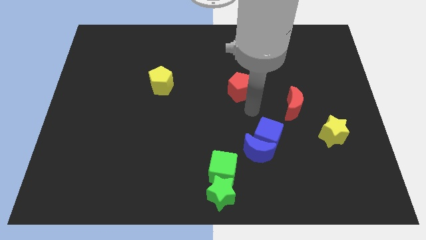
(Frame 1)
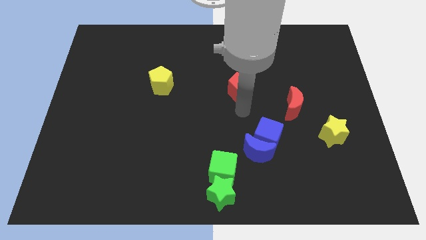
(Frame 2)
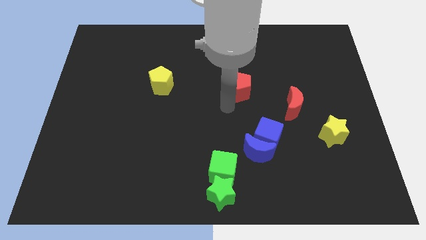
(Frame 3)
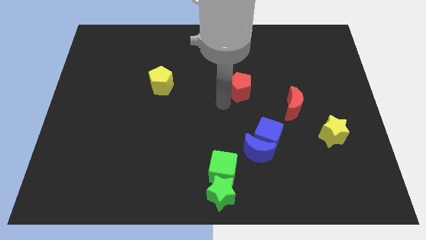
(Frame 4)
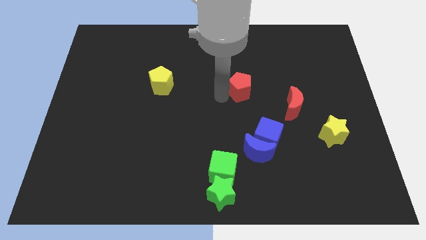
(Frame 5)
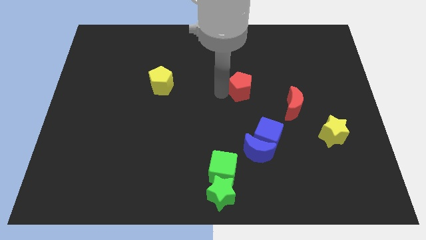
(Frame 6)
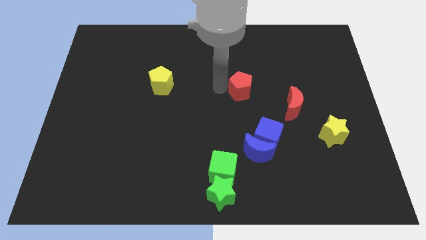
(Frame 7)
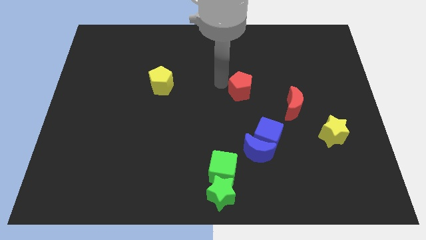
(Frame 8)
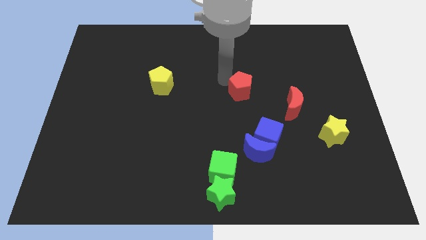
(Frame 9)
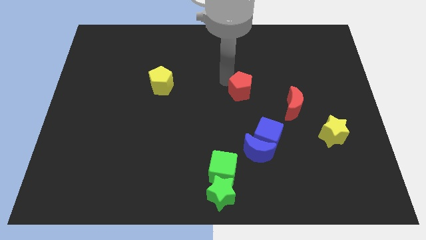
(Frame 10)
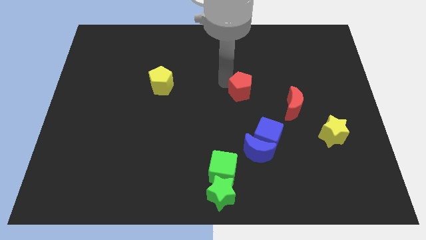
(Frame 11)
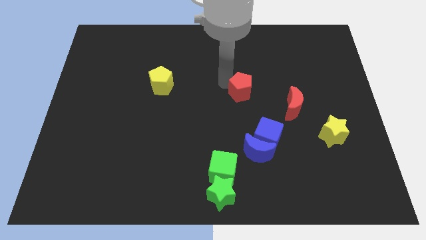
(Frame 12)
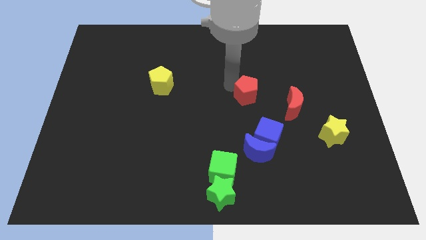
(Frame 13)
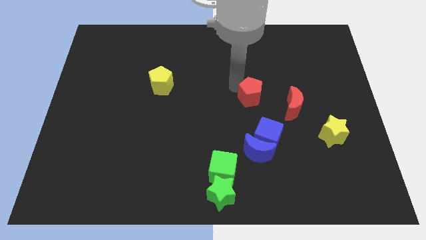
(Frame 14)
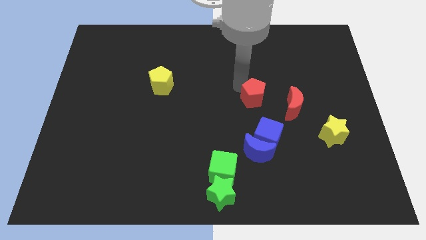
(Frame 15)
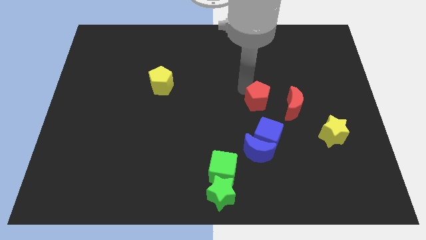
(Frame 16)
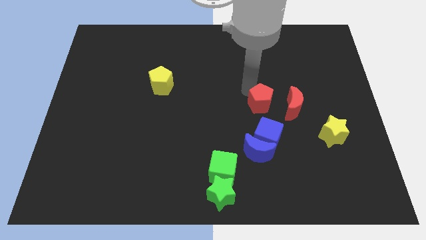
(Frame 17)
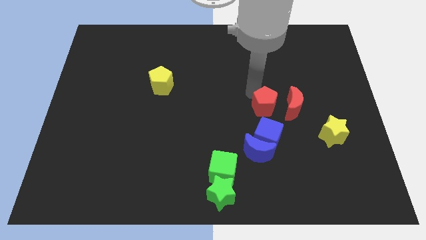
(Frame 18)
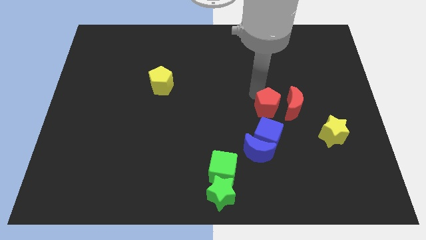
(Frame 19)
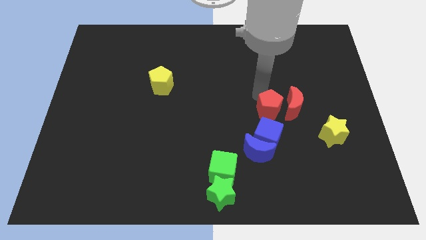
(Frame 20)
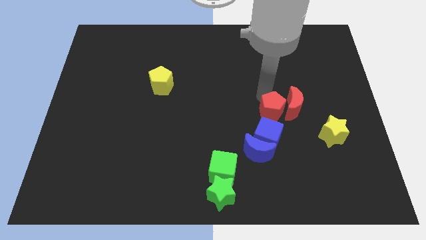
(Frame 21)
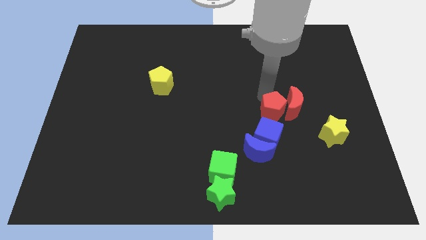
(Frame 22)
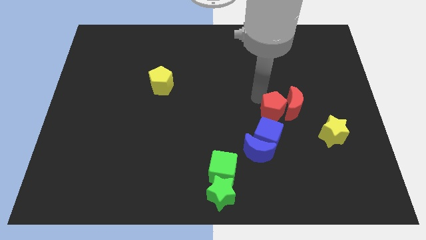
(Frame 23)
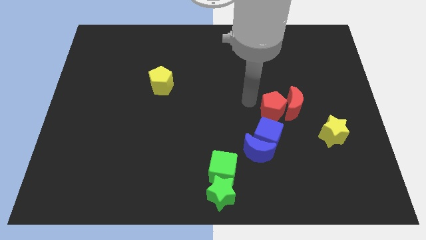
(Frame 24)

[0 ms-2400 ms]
place red pentagon above blue cube

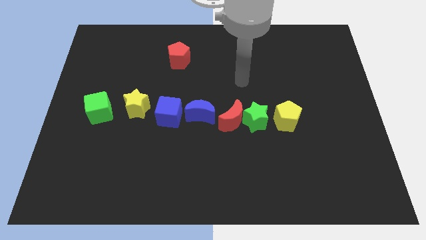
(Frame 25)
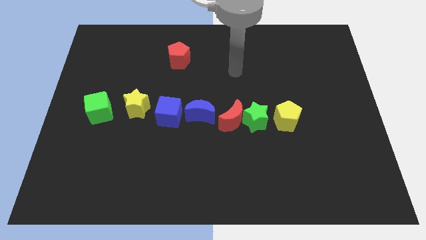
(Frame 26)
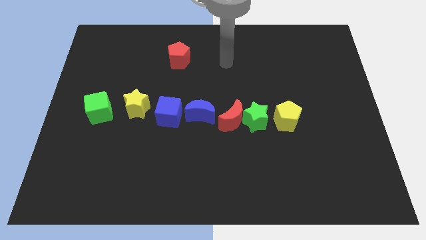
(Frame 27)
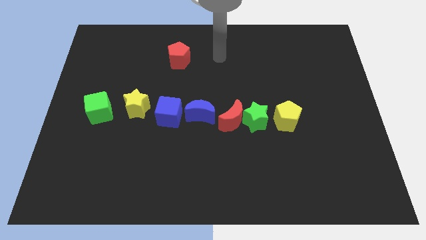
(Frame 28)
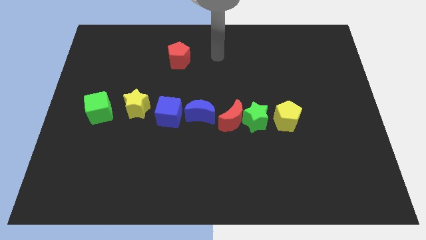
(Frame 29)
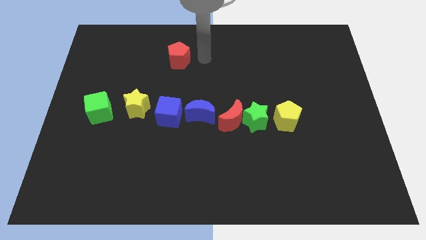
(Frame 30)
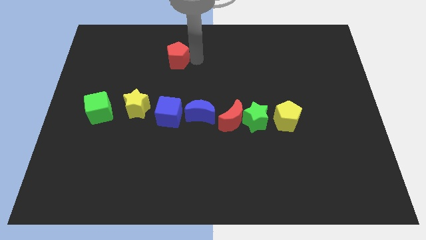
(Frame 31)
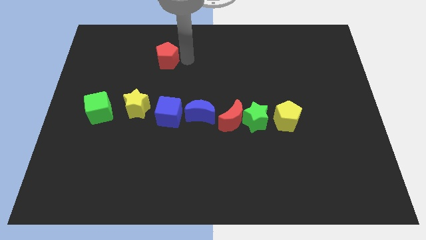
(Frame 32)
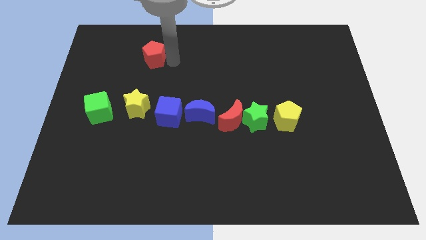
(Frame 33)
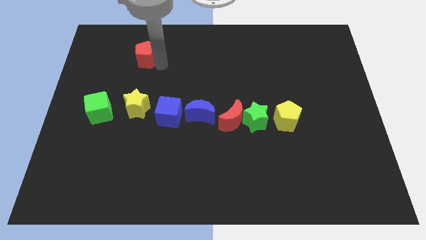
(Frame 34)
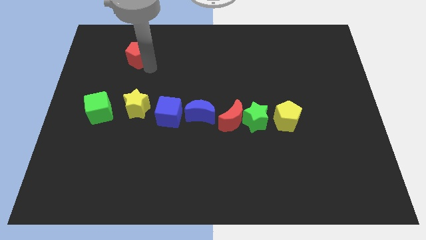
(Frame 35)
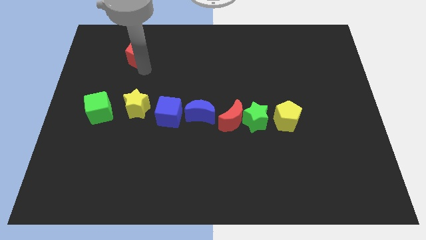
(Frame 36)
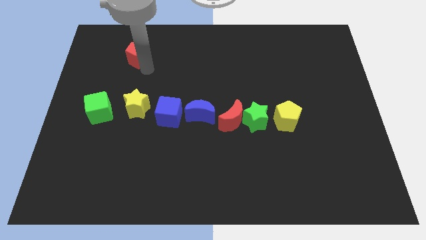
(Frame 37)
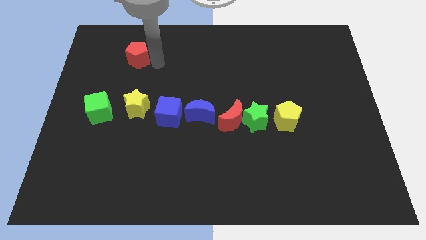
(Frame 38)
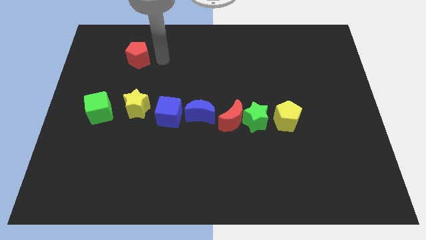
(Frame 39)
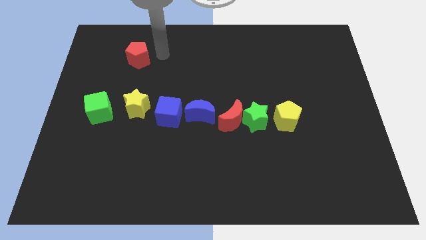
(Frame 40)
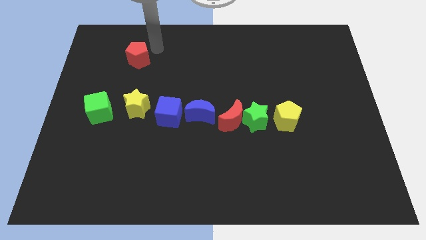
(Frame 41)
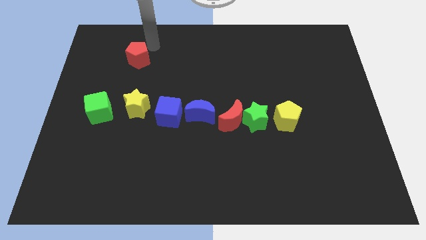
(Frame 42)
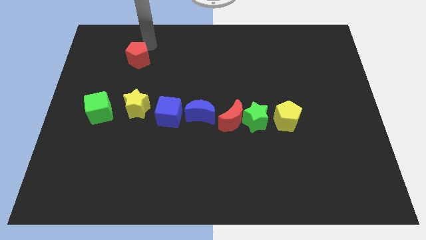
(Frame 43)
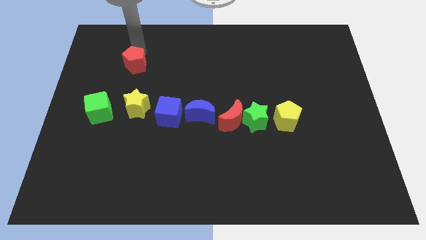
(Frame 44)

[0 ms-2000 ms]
place the red pentagon above the yellow star

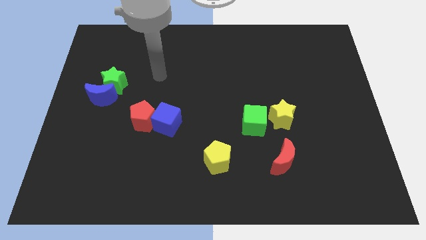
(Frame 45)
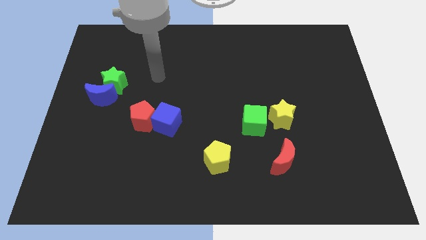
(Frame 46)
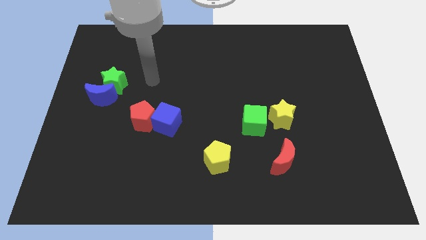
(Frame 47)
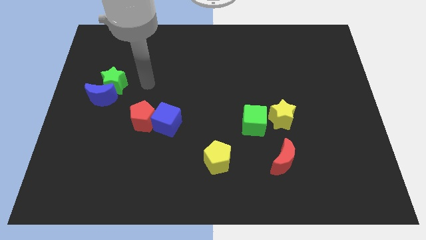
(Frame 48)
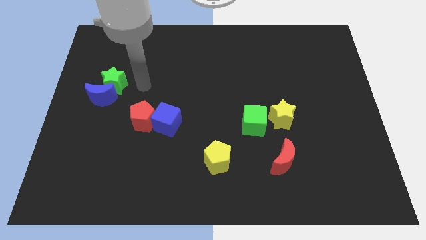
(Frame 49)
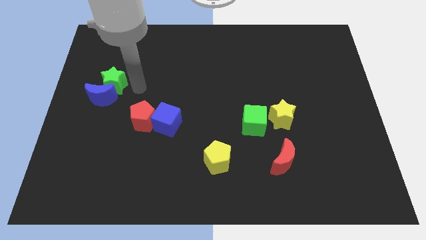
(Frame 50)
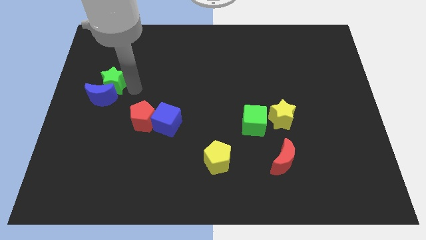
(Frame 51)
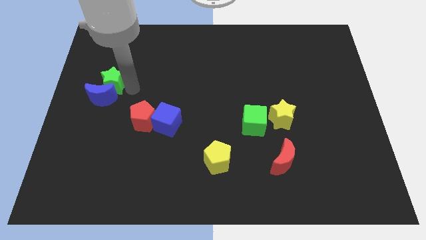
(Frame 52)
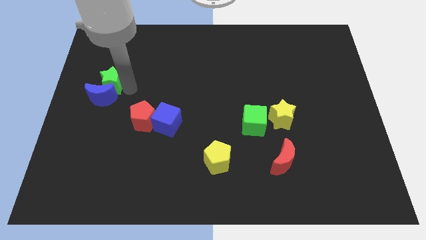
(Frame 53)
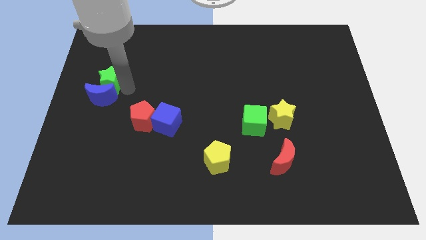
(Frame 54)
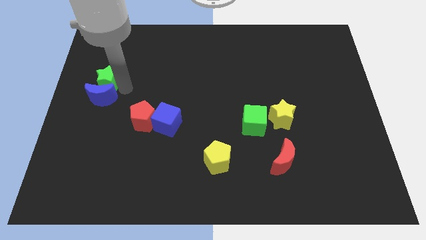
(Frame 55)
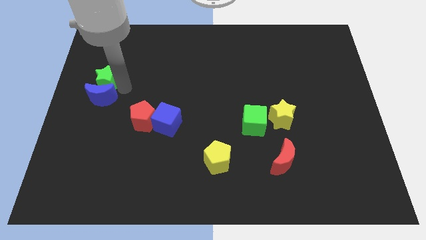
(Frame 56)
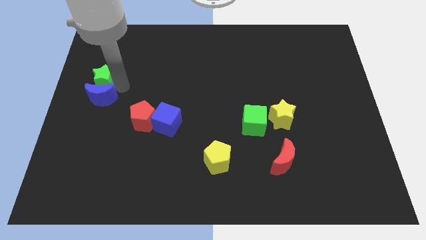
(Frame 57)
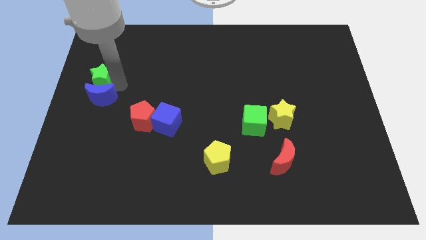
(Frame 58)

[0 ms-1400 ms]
push the green star to the left side slightly

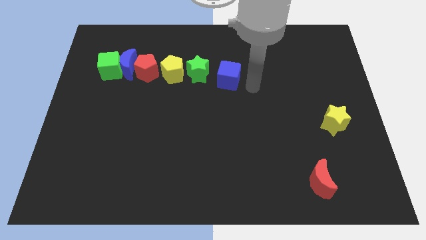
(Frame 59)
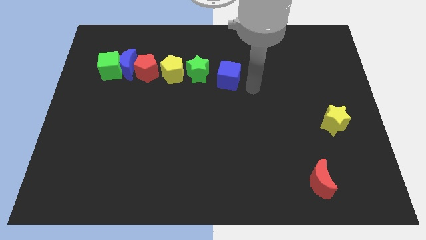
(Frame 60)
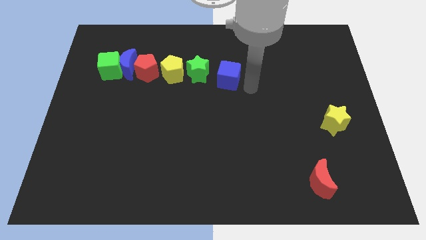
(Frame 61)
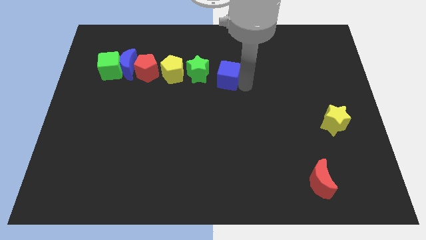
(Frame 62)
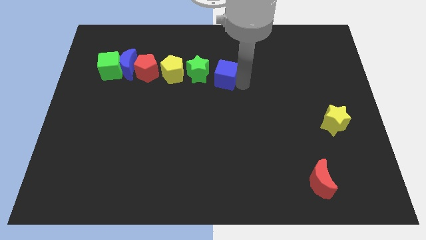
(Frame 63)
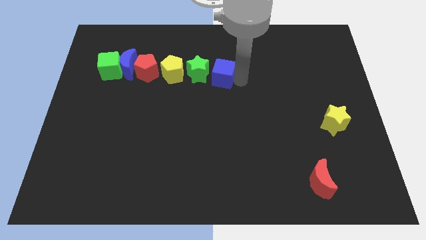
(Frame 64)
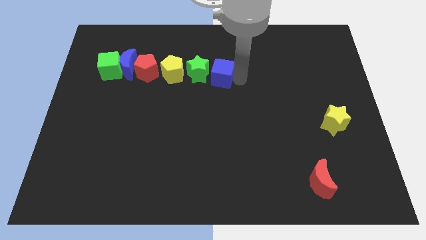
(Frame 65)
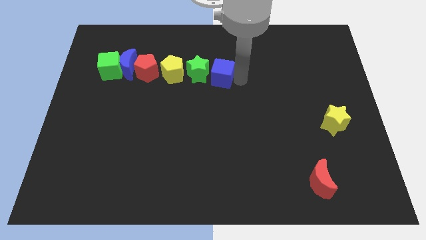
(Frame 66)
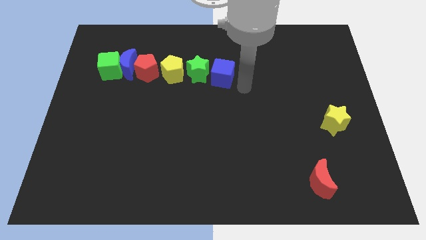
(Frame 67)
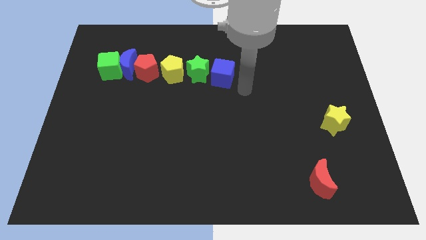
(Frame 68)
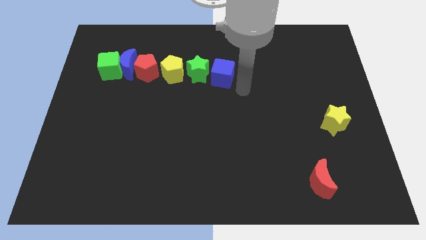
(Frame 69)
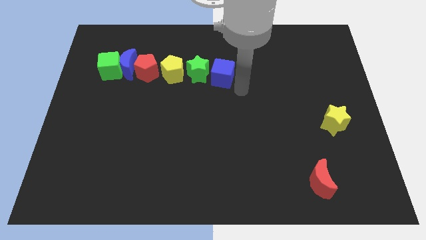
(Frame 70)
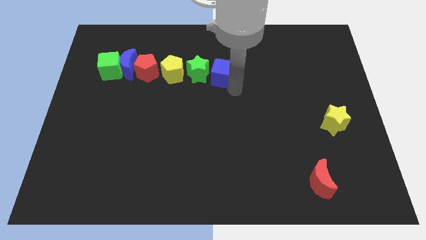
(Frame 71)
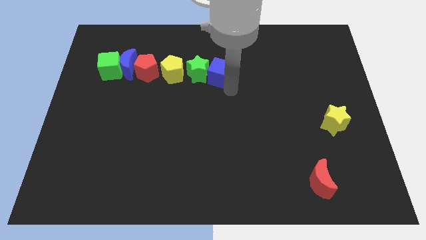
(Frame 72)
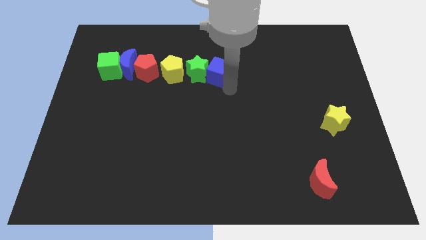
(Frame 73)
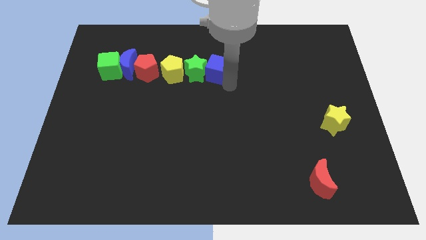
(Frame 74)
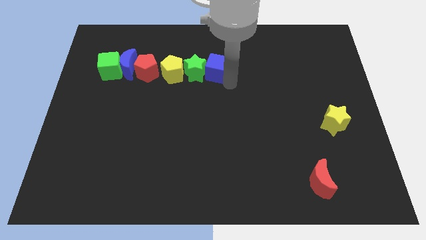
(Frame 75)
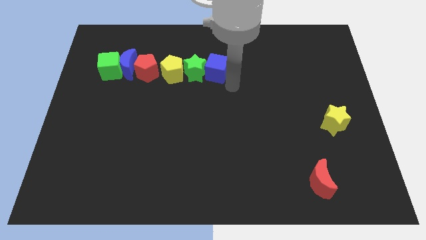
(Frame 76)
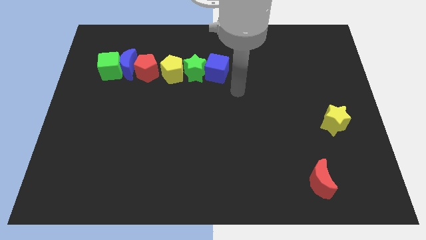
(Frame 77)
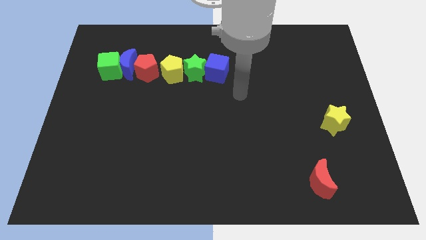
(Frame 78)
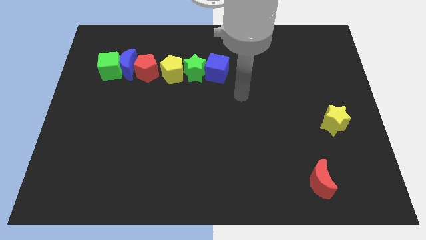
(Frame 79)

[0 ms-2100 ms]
push the blue cube into the green star

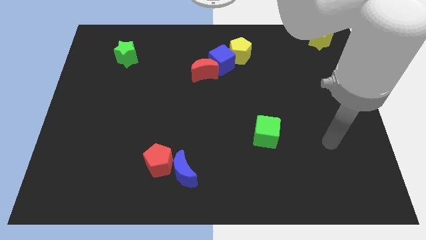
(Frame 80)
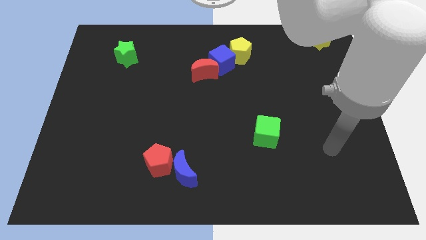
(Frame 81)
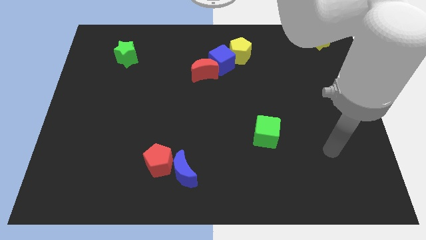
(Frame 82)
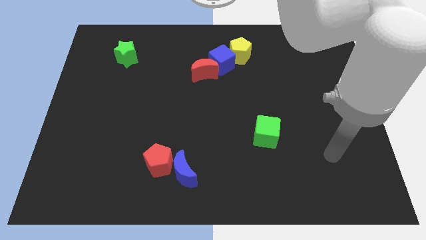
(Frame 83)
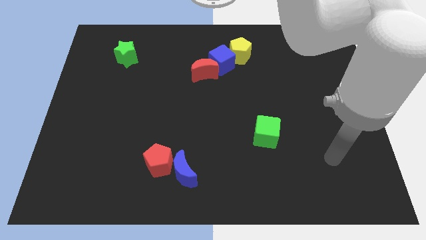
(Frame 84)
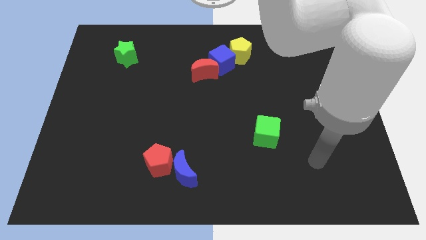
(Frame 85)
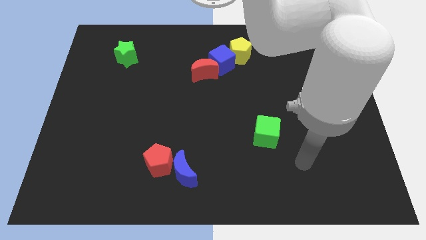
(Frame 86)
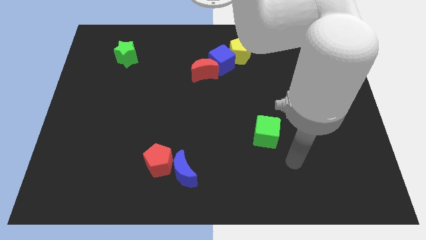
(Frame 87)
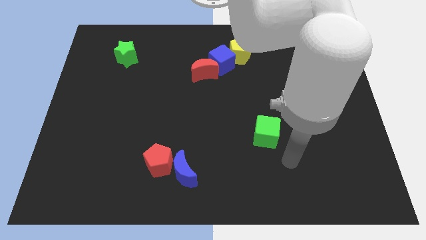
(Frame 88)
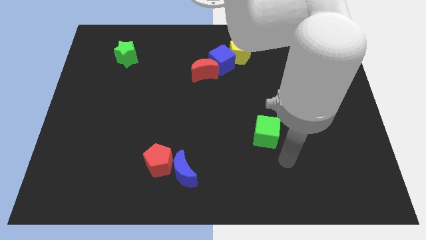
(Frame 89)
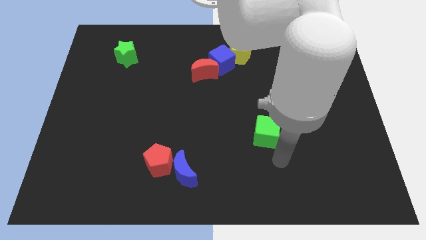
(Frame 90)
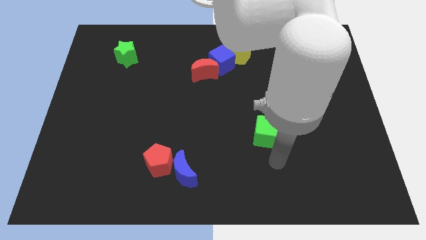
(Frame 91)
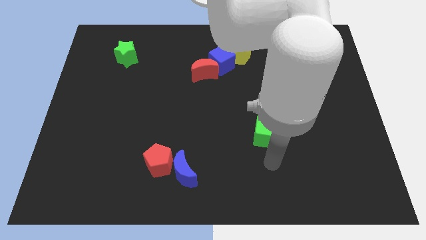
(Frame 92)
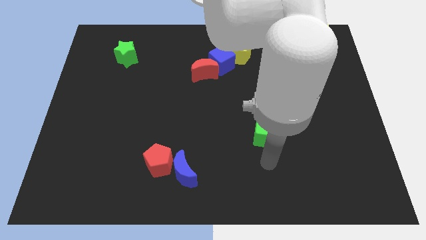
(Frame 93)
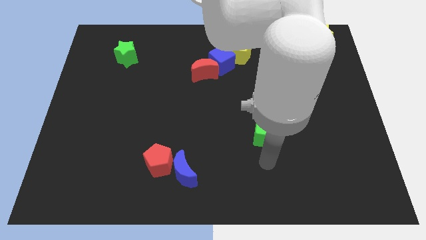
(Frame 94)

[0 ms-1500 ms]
point your arm below the green cube
